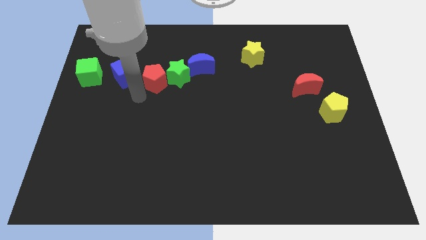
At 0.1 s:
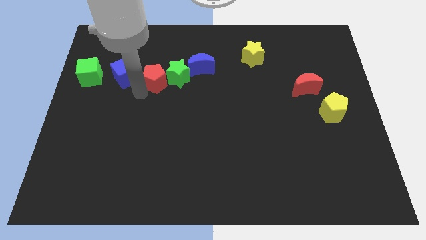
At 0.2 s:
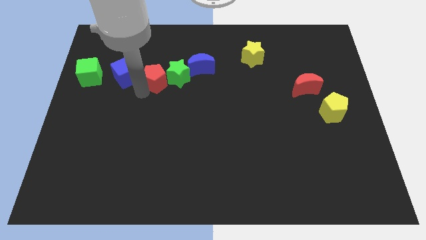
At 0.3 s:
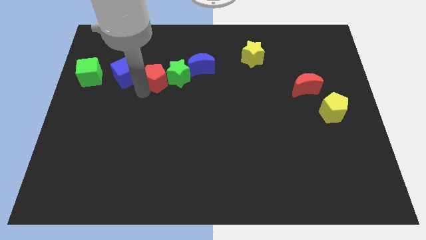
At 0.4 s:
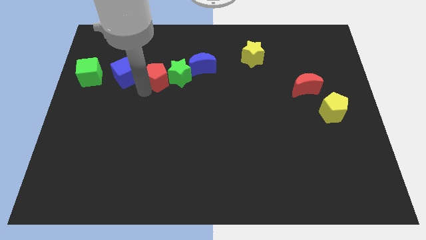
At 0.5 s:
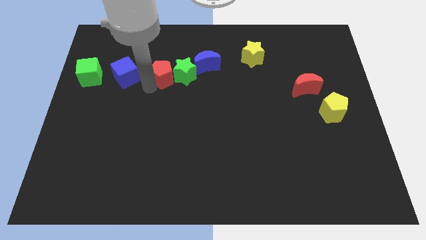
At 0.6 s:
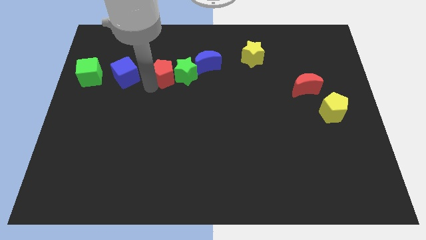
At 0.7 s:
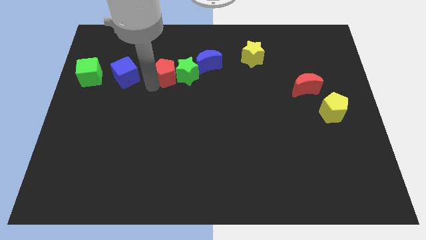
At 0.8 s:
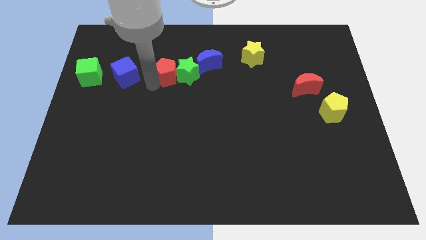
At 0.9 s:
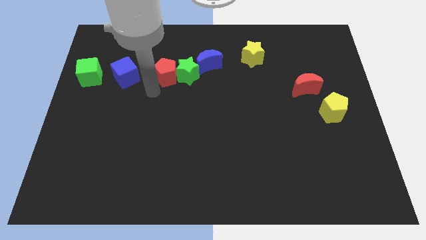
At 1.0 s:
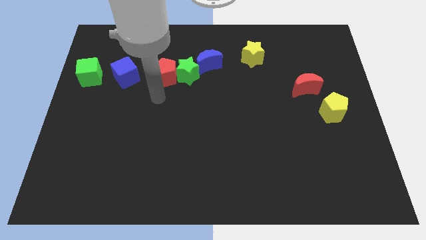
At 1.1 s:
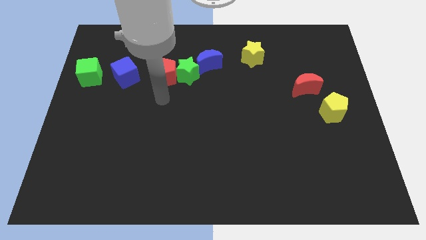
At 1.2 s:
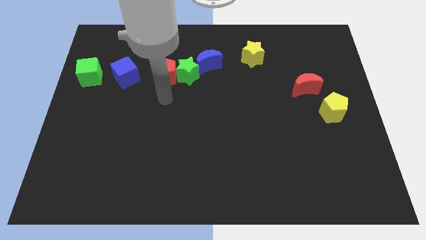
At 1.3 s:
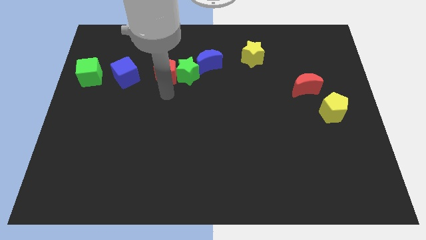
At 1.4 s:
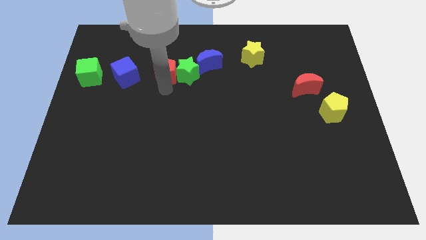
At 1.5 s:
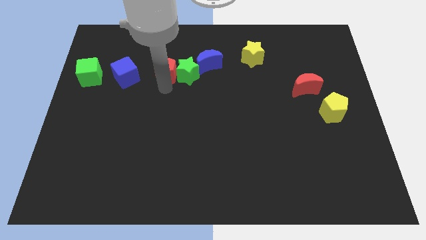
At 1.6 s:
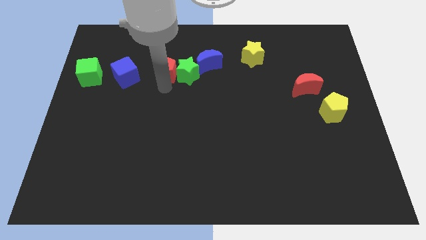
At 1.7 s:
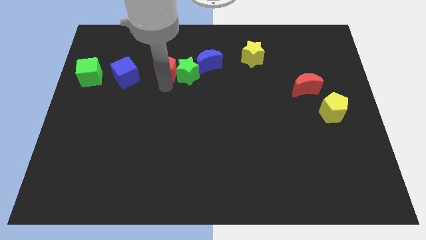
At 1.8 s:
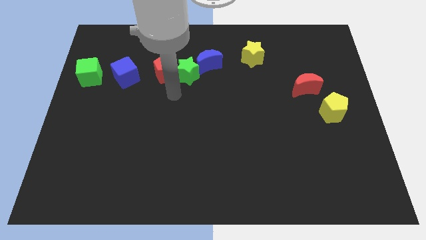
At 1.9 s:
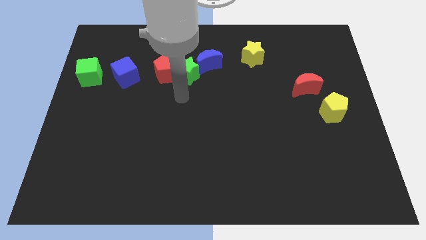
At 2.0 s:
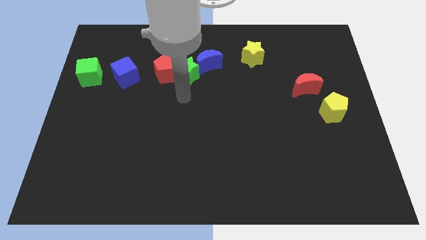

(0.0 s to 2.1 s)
adjust the red pentagon to the left of the green star

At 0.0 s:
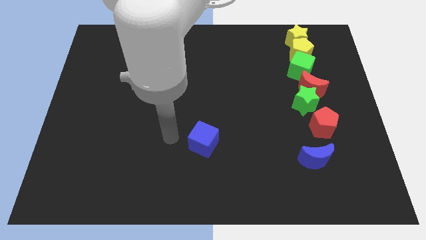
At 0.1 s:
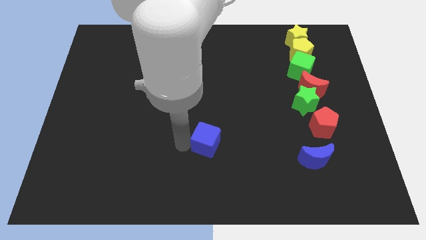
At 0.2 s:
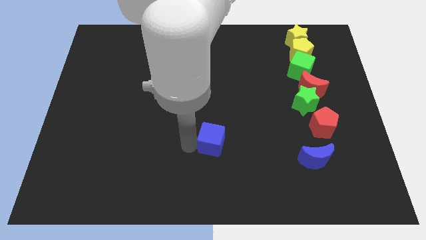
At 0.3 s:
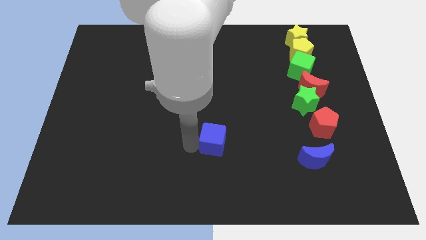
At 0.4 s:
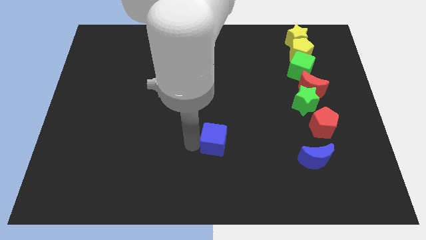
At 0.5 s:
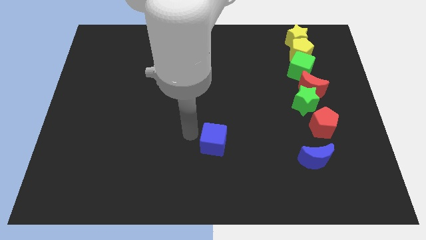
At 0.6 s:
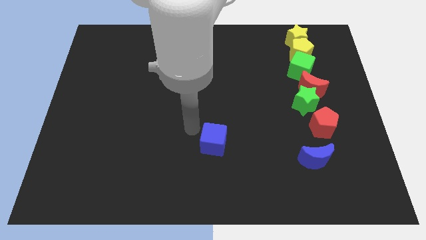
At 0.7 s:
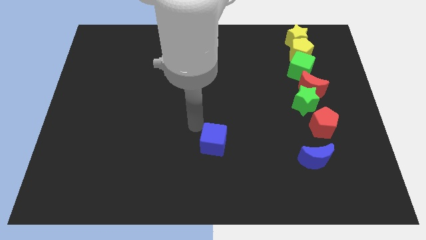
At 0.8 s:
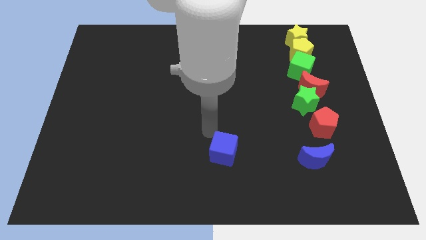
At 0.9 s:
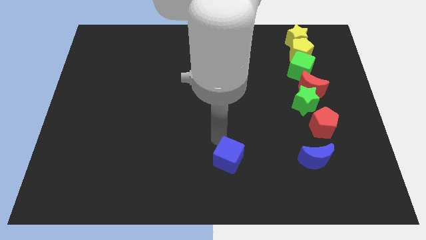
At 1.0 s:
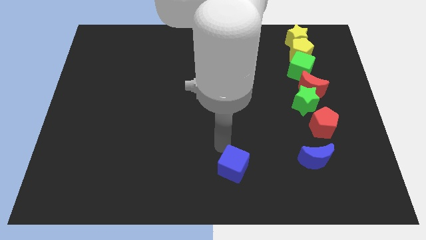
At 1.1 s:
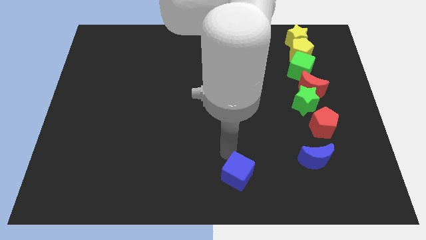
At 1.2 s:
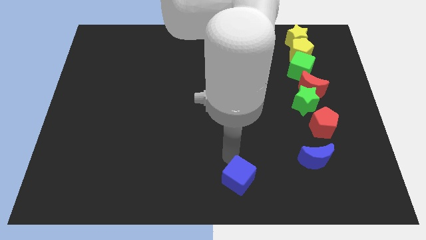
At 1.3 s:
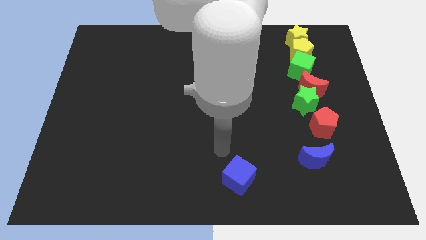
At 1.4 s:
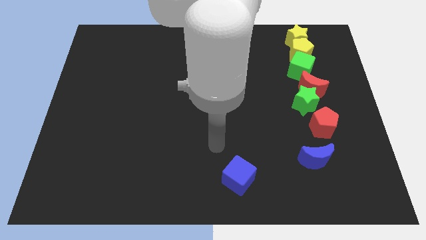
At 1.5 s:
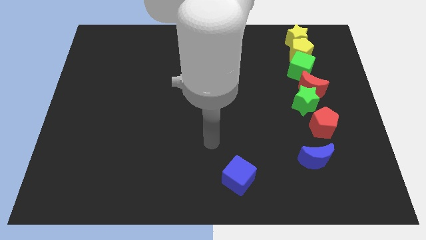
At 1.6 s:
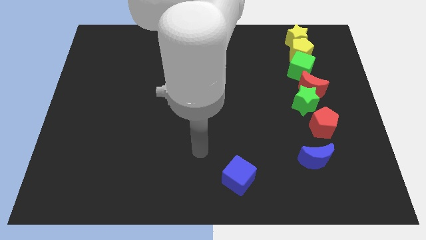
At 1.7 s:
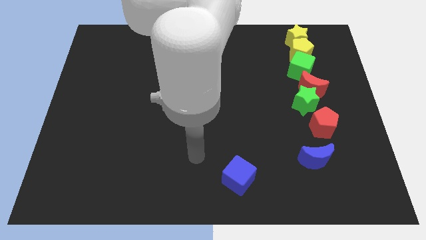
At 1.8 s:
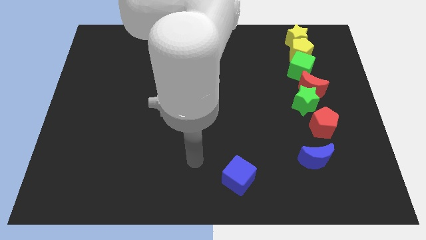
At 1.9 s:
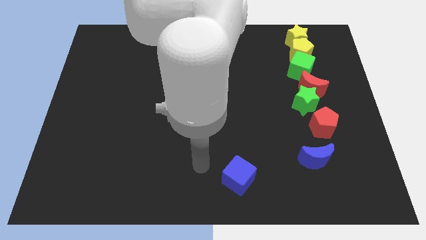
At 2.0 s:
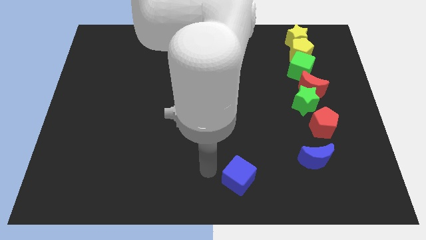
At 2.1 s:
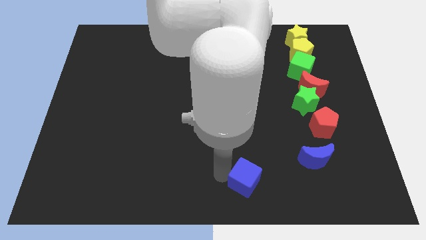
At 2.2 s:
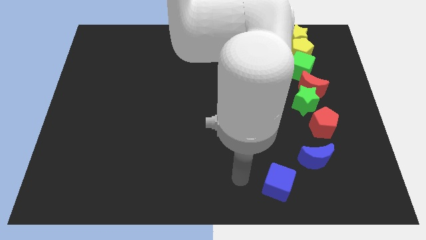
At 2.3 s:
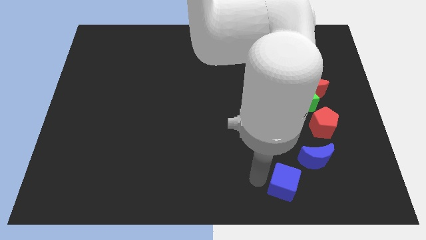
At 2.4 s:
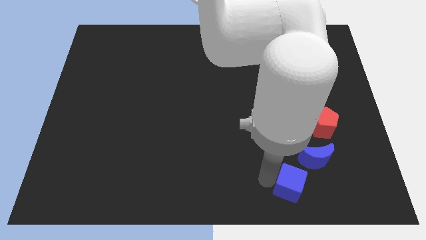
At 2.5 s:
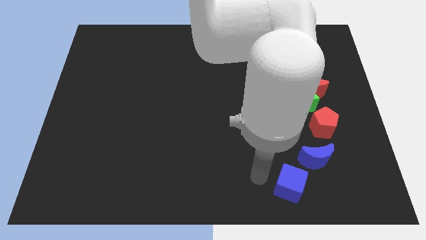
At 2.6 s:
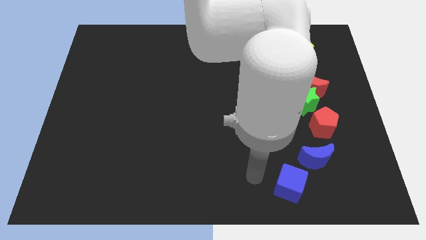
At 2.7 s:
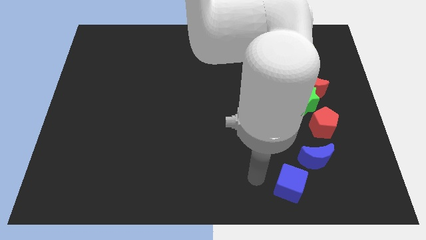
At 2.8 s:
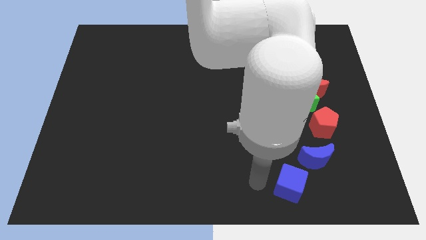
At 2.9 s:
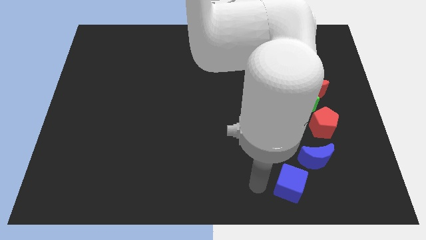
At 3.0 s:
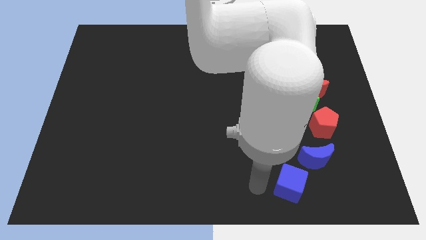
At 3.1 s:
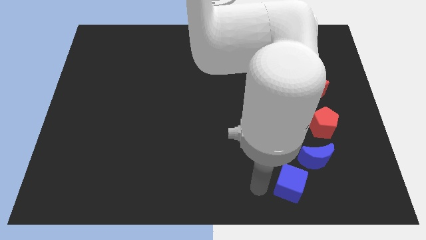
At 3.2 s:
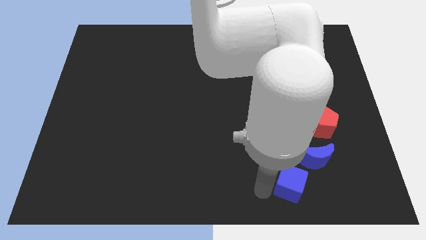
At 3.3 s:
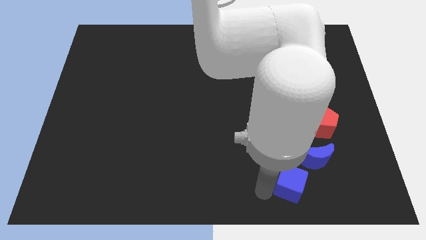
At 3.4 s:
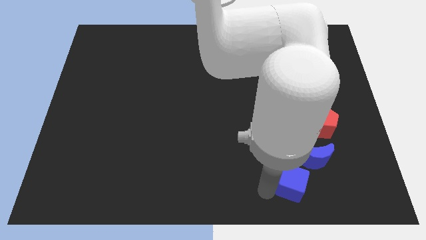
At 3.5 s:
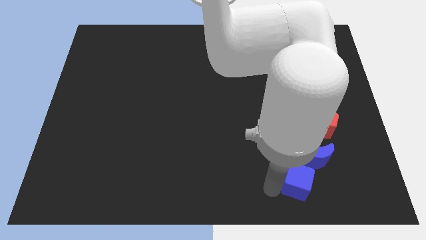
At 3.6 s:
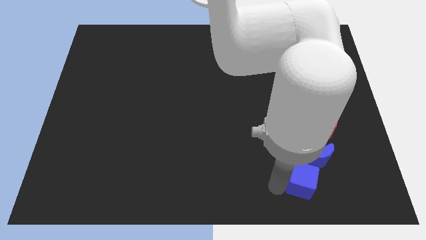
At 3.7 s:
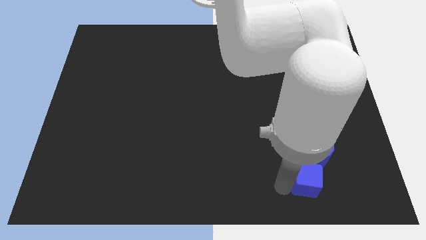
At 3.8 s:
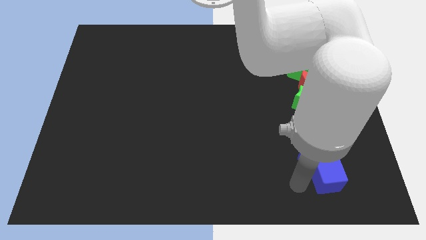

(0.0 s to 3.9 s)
slide the blue cube vertically below the blue moon

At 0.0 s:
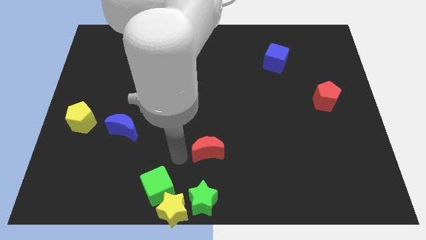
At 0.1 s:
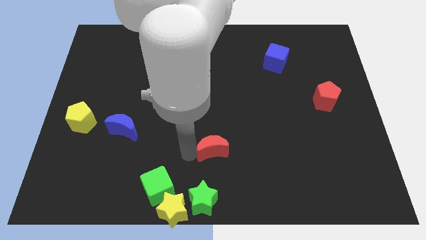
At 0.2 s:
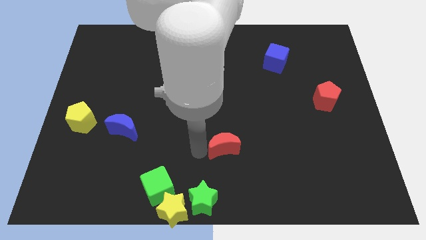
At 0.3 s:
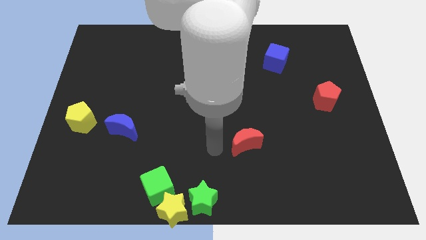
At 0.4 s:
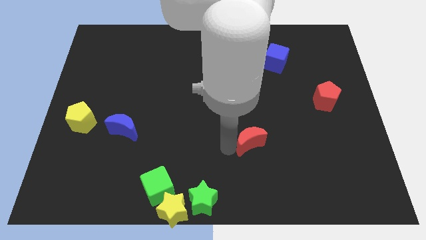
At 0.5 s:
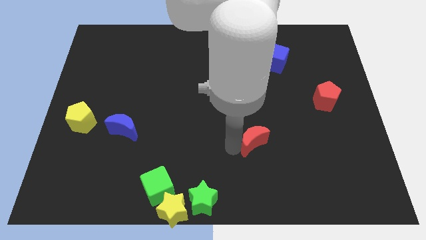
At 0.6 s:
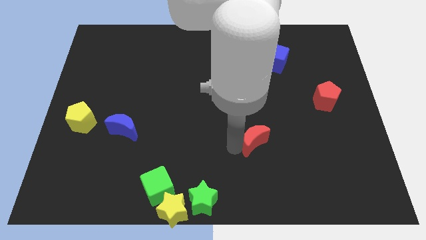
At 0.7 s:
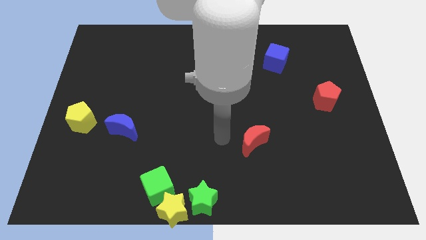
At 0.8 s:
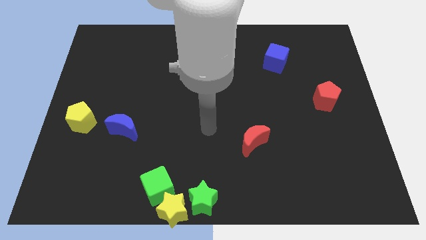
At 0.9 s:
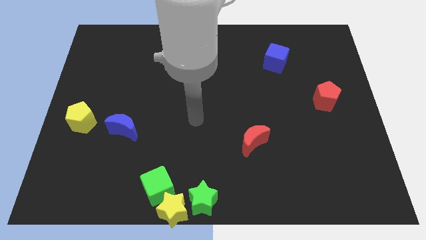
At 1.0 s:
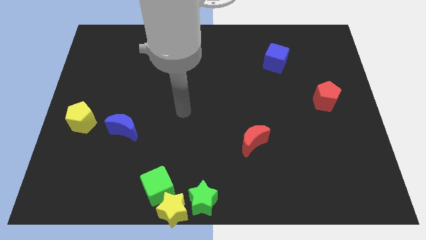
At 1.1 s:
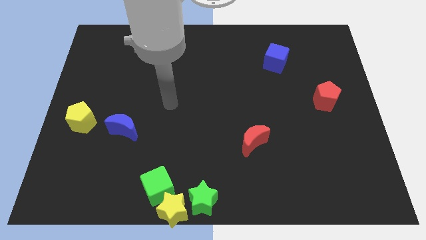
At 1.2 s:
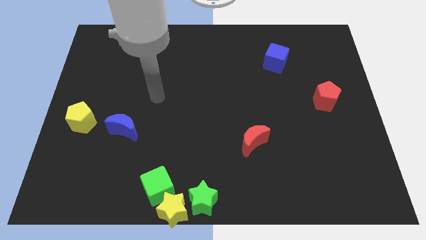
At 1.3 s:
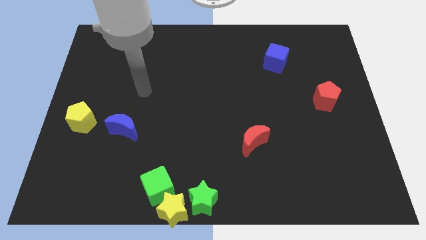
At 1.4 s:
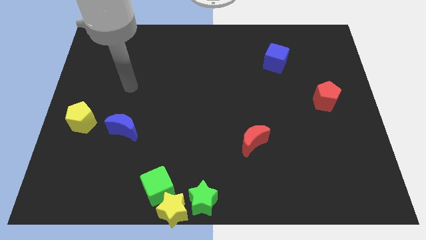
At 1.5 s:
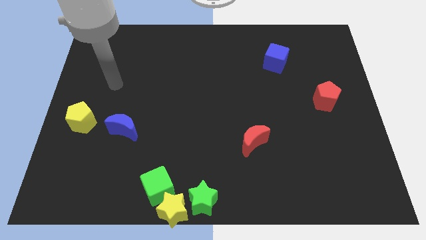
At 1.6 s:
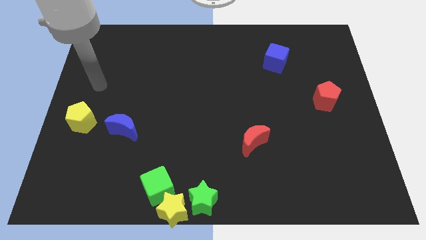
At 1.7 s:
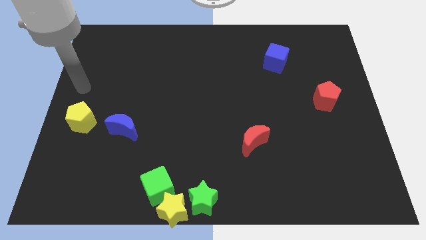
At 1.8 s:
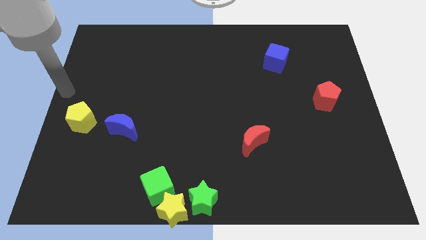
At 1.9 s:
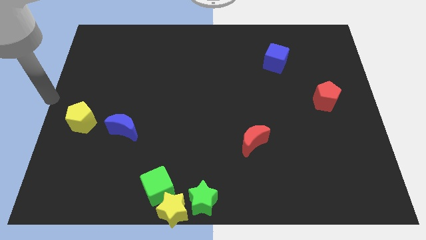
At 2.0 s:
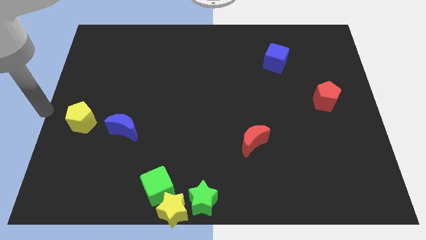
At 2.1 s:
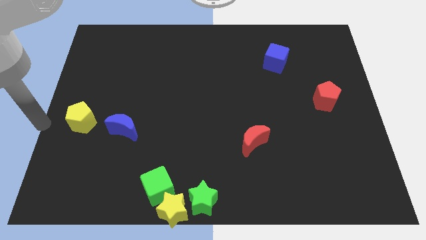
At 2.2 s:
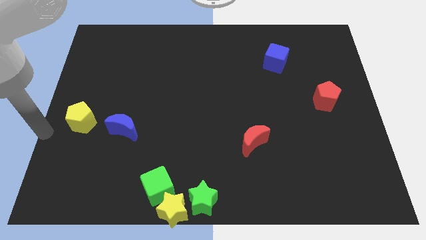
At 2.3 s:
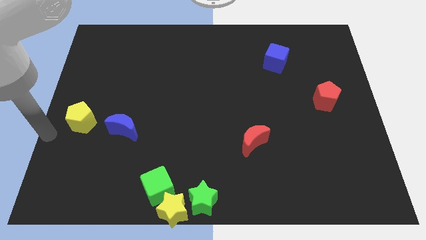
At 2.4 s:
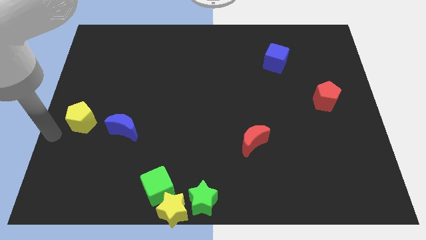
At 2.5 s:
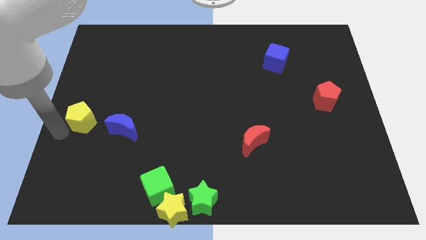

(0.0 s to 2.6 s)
place the red moon between red pentagon and green star

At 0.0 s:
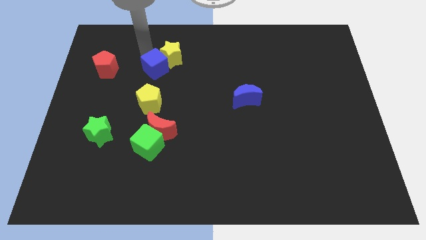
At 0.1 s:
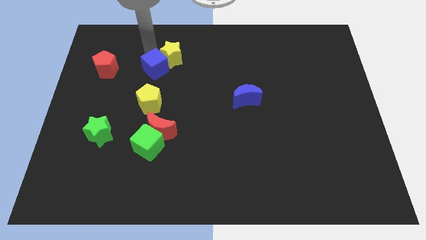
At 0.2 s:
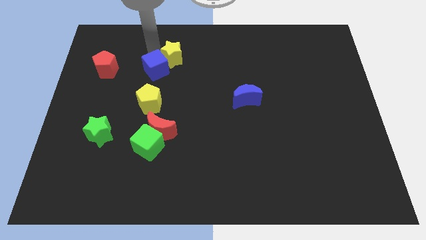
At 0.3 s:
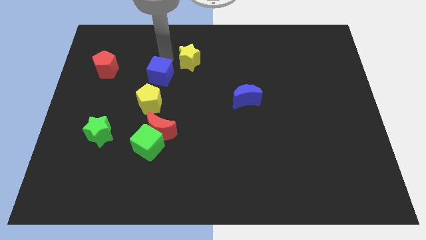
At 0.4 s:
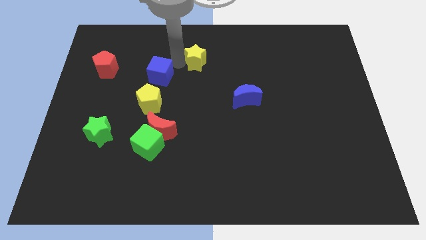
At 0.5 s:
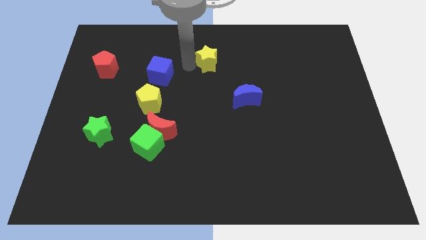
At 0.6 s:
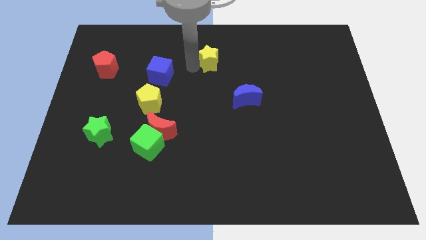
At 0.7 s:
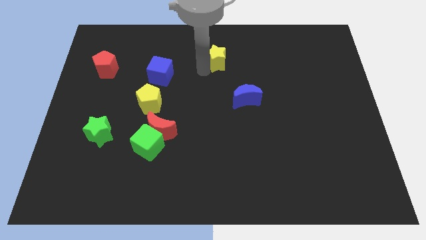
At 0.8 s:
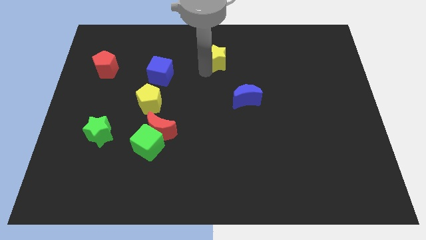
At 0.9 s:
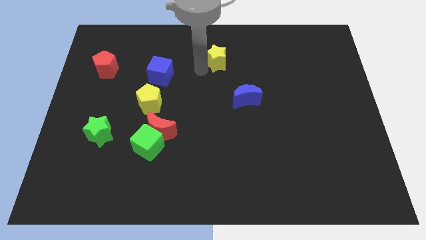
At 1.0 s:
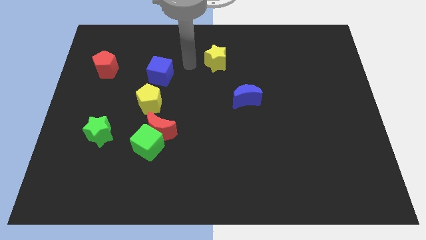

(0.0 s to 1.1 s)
slightly move the yellow star towards the right
